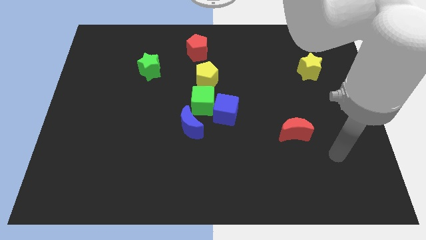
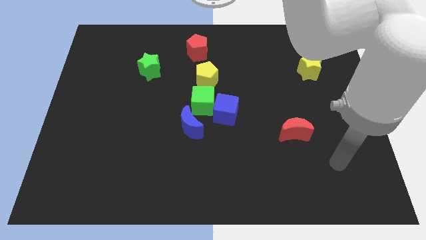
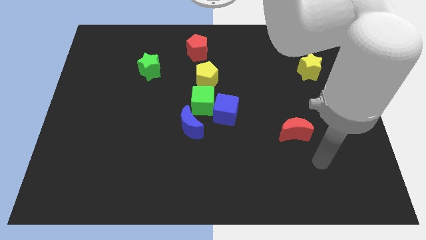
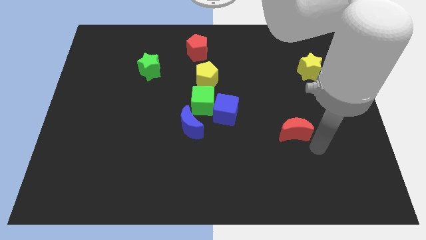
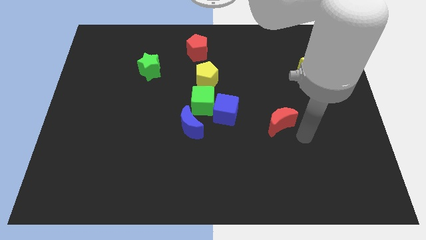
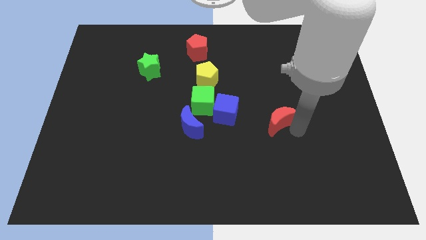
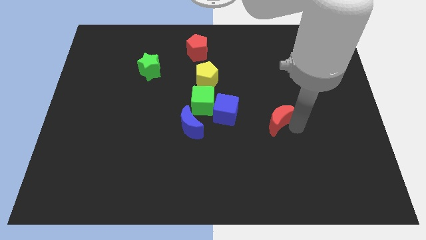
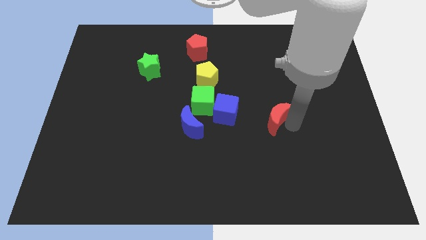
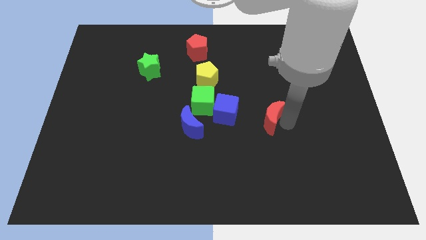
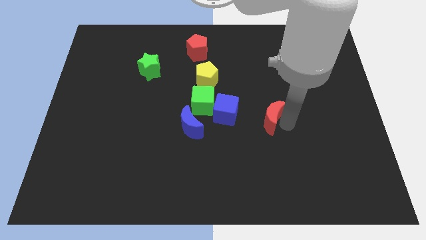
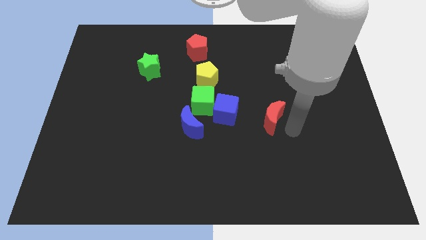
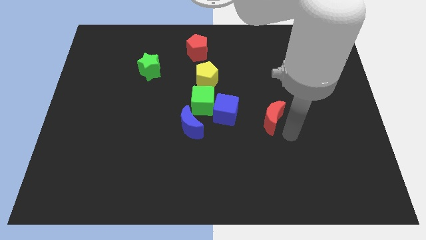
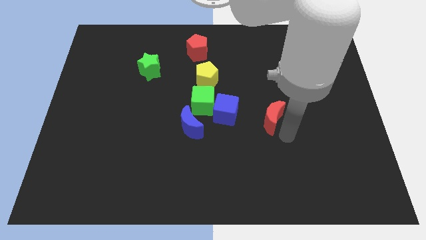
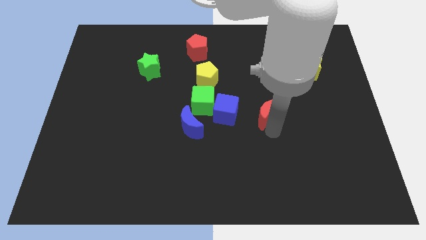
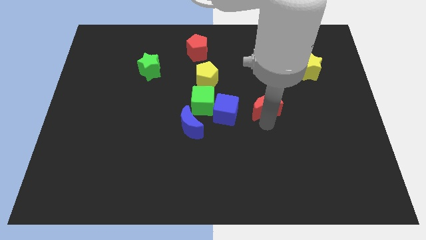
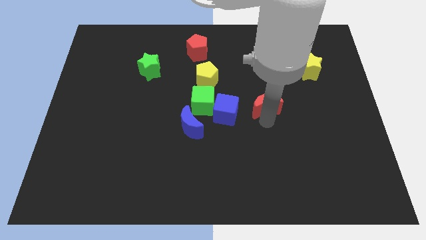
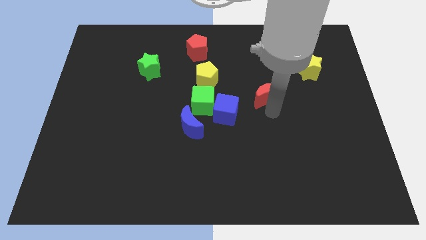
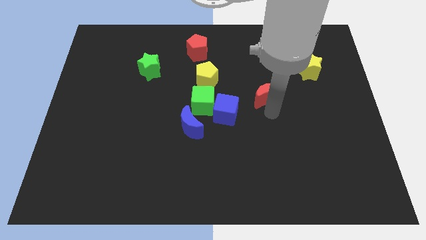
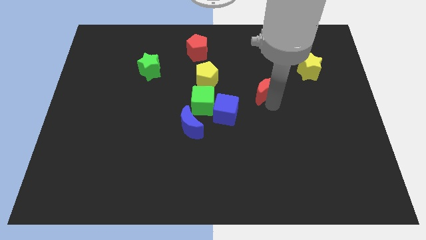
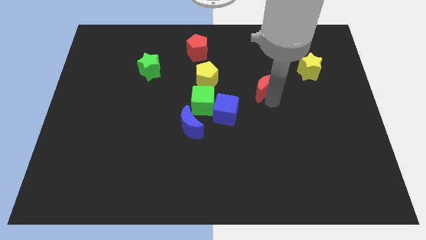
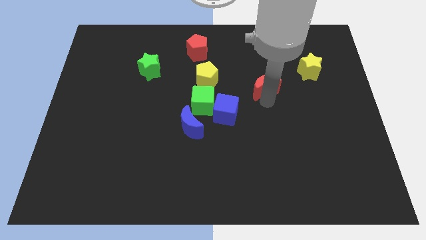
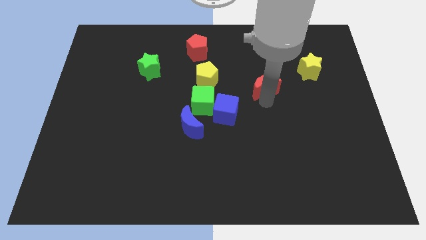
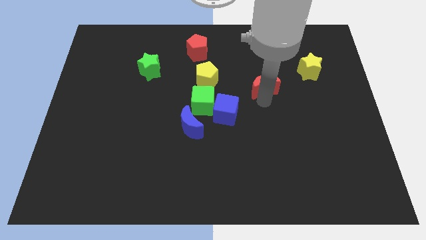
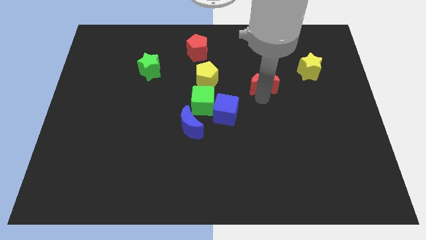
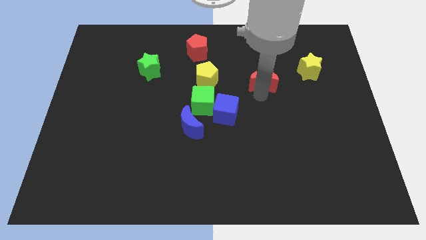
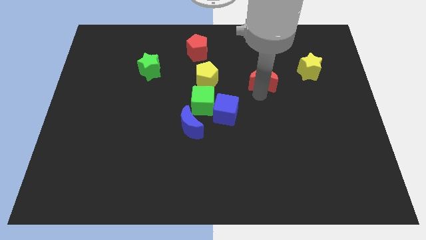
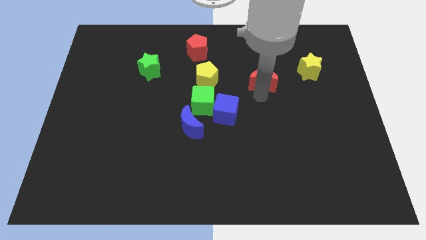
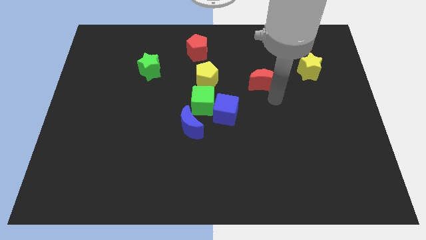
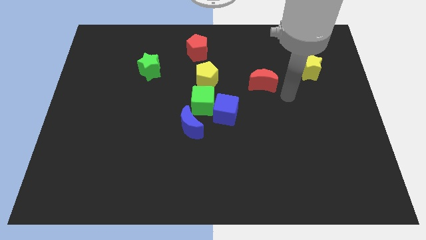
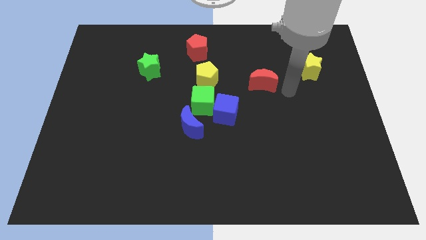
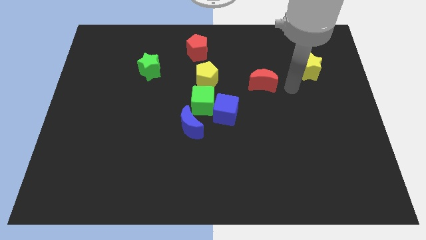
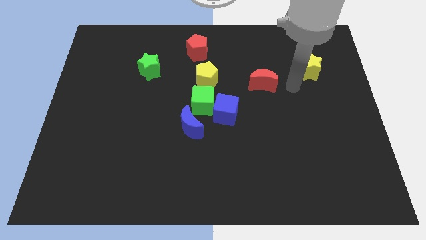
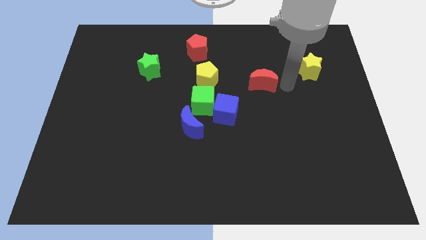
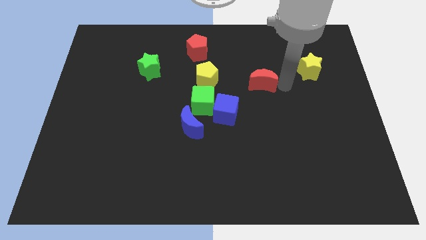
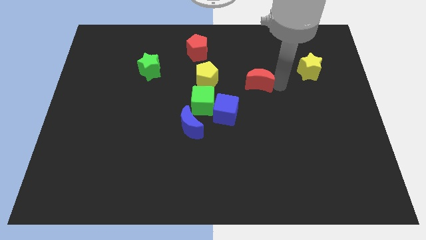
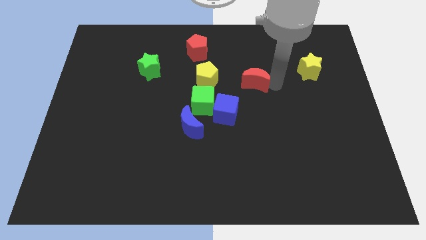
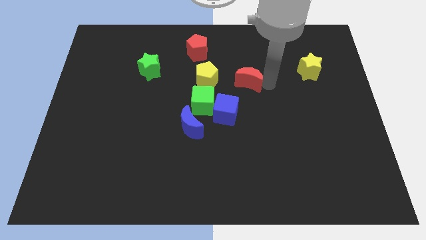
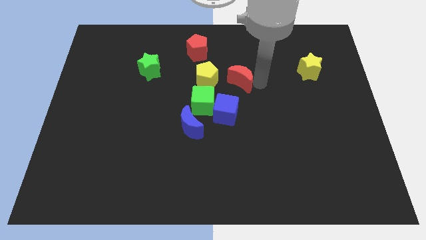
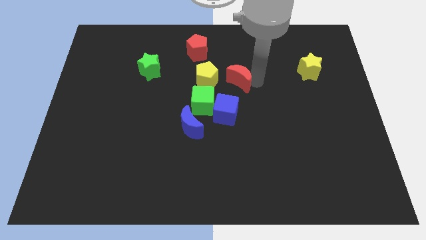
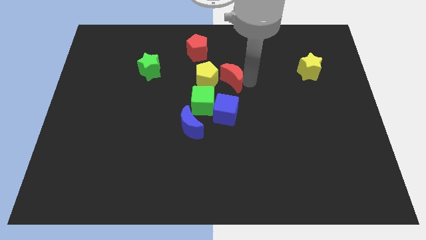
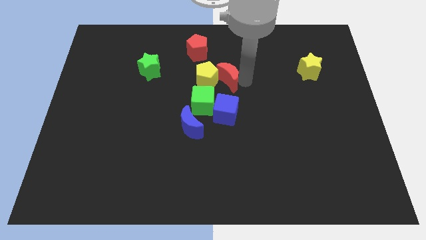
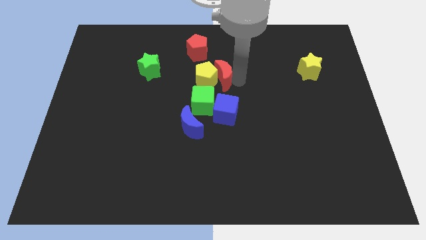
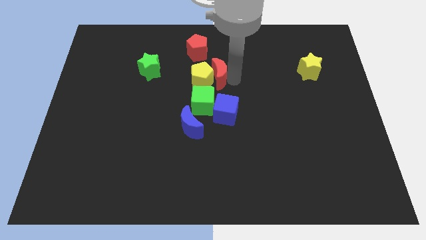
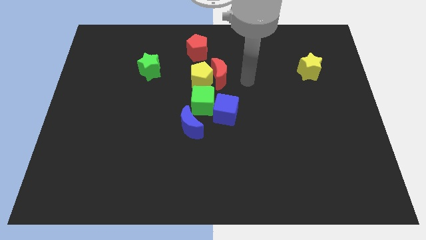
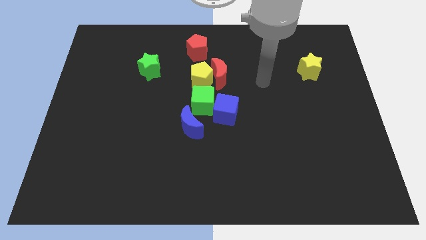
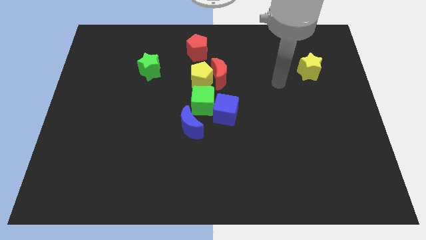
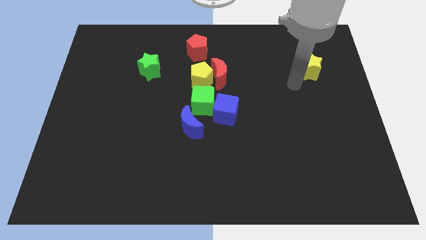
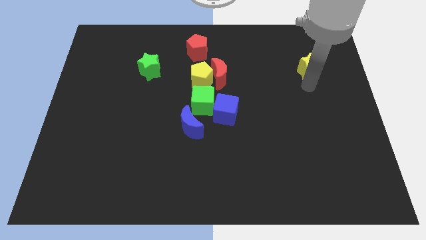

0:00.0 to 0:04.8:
push the red crescent into the yellow pentagon

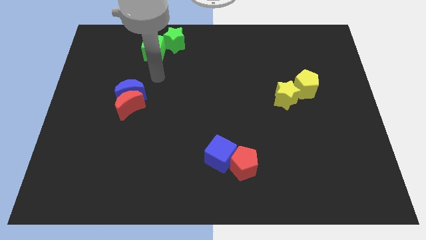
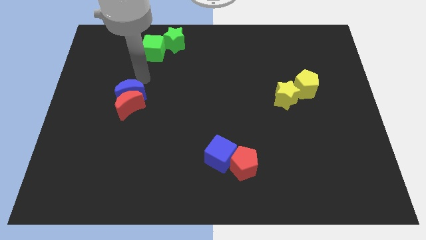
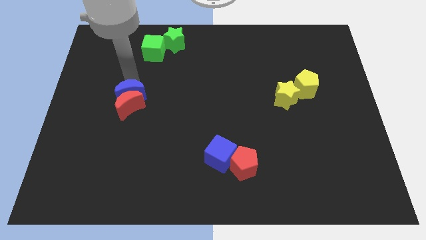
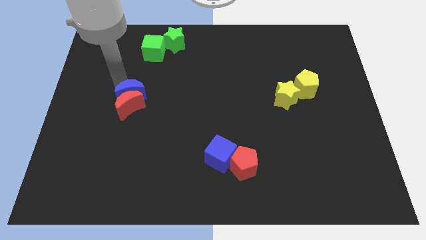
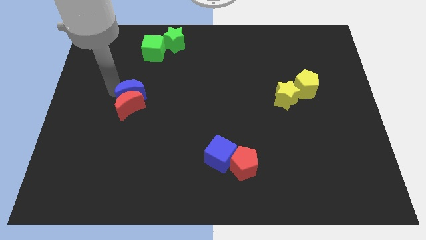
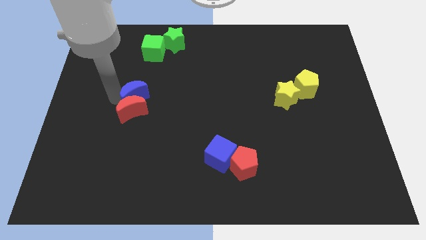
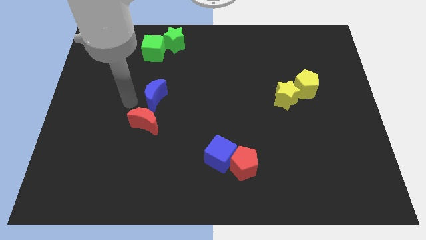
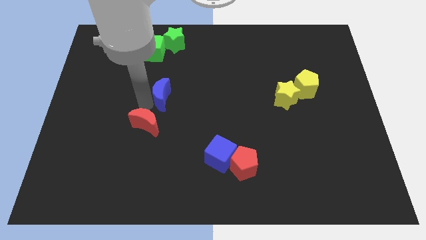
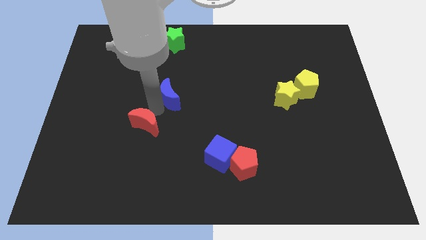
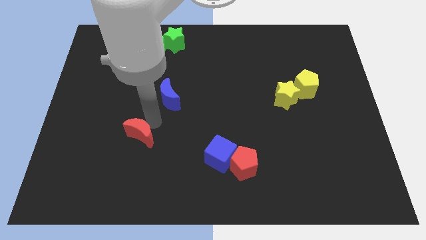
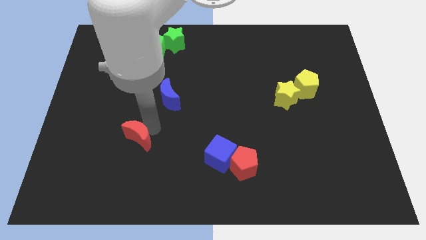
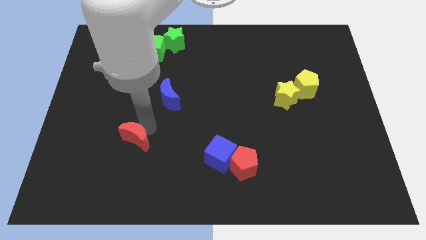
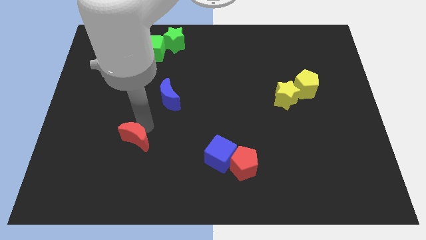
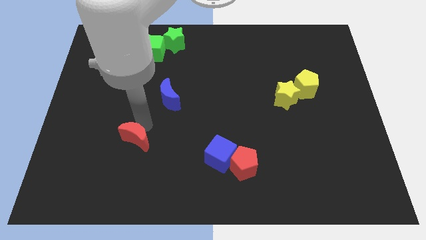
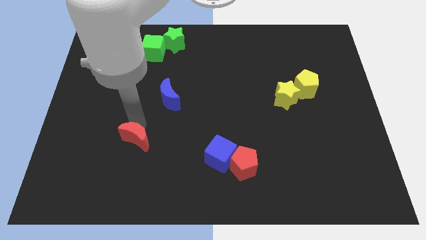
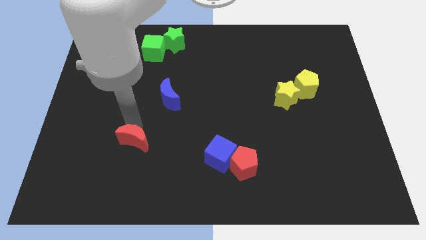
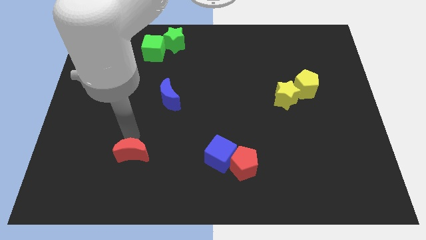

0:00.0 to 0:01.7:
separate blue moon and red moon

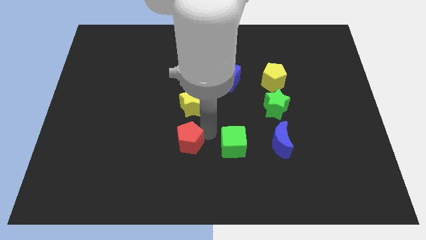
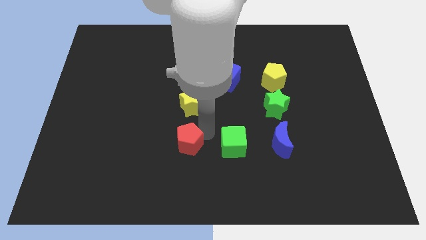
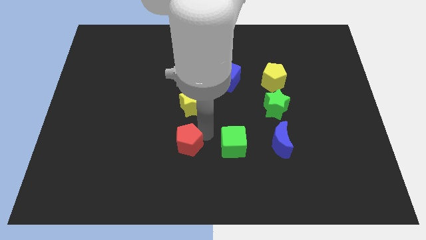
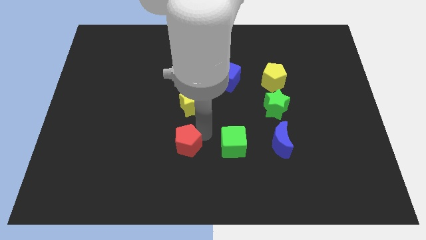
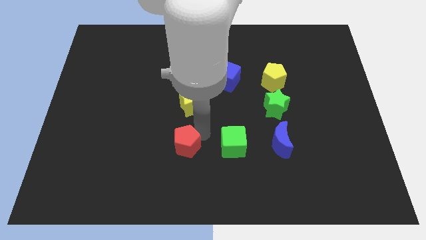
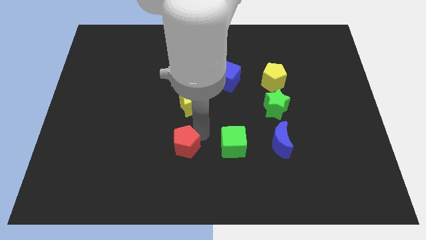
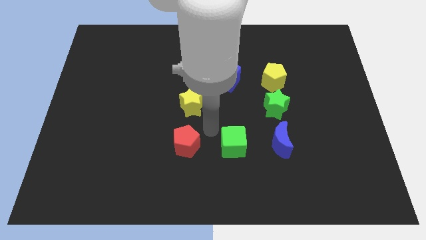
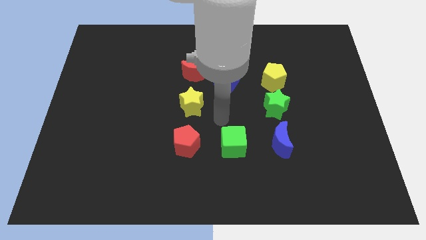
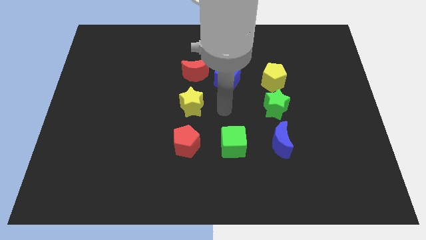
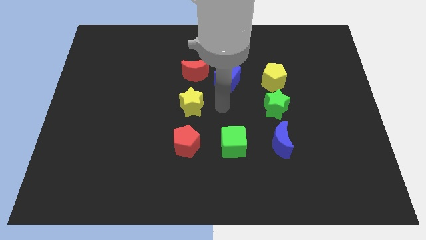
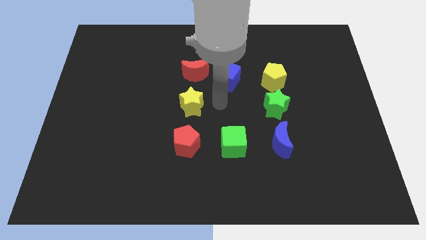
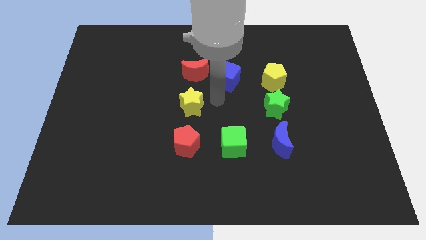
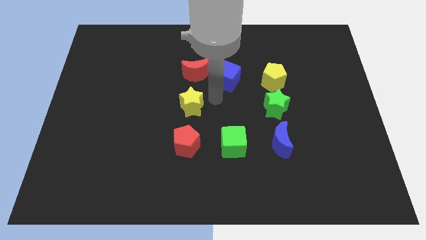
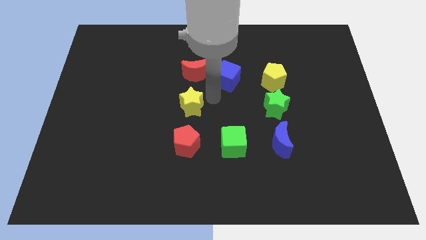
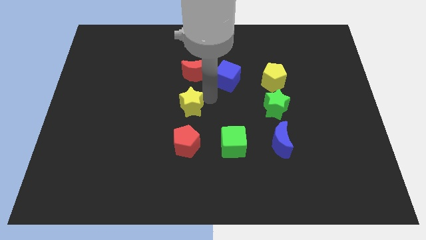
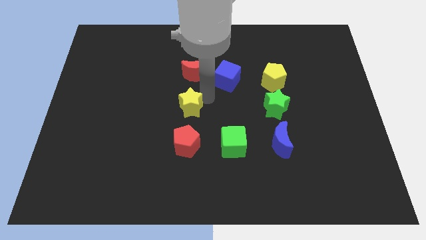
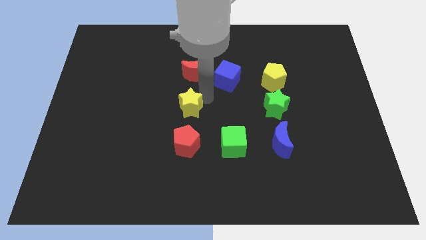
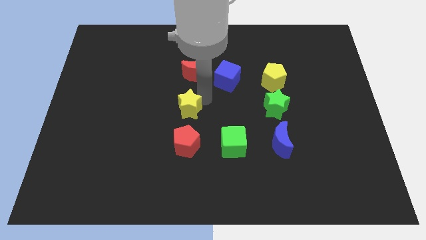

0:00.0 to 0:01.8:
move your arm to the yellow star

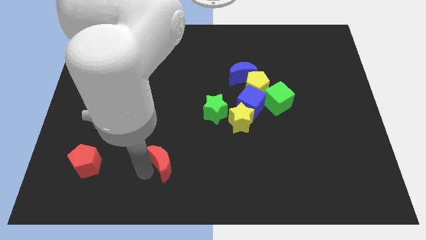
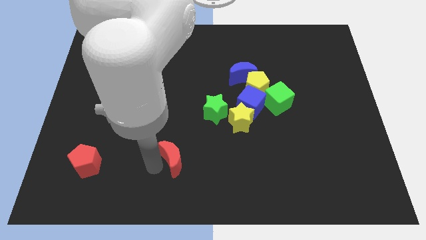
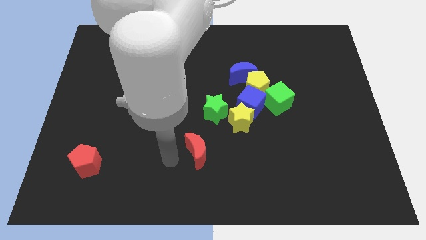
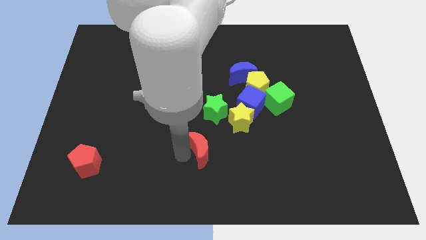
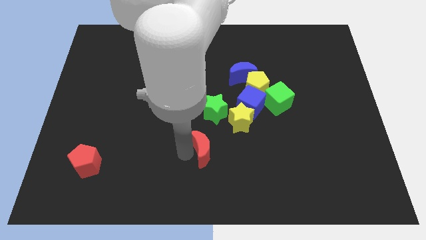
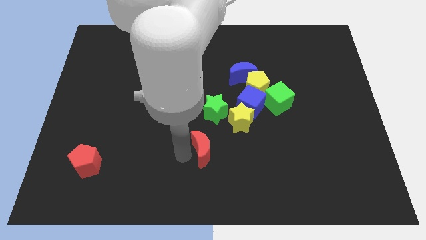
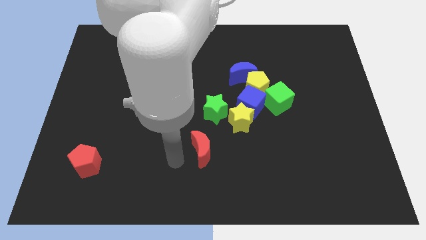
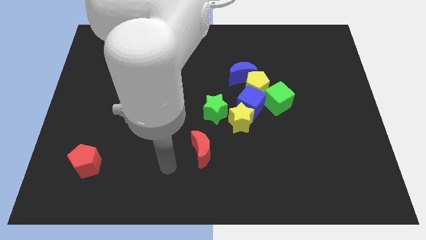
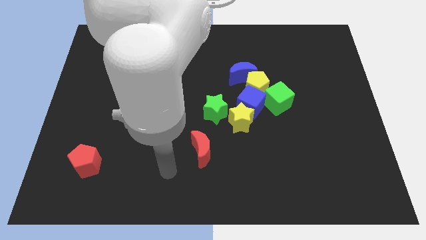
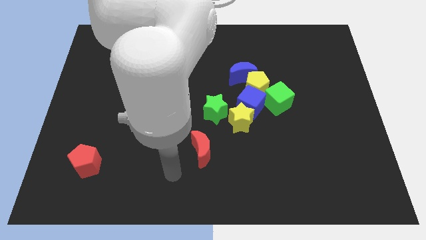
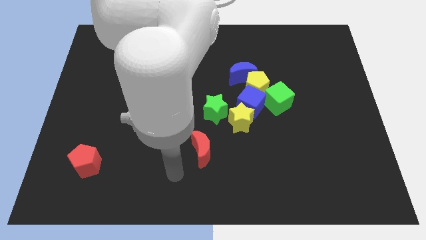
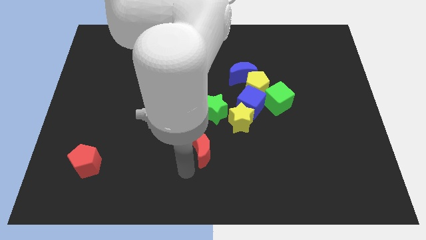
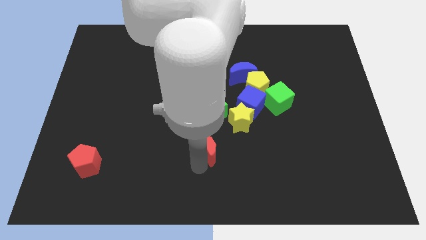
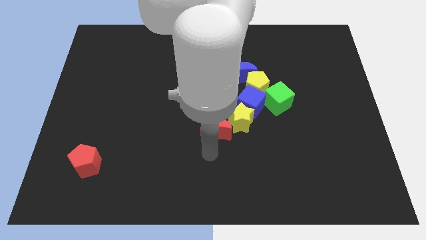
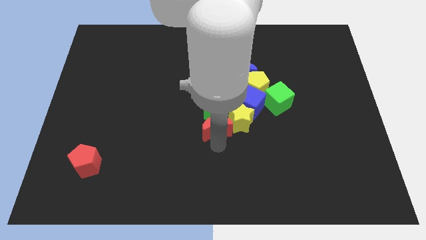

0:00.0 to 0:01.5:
place the red moon underneath the green star
